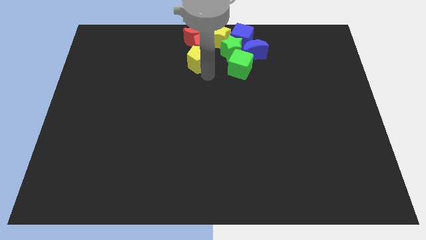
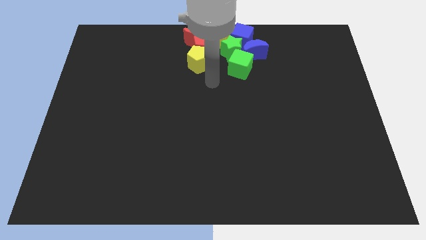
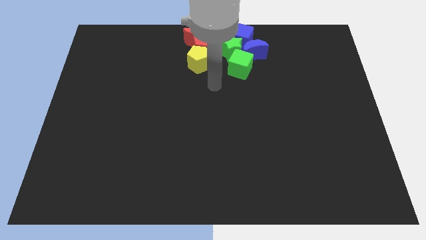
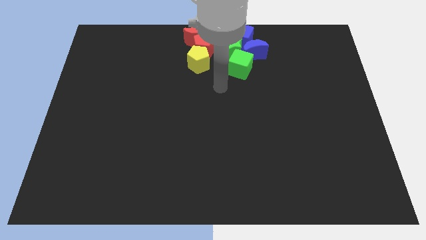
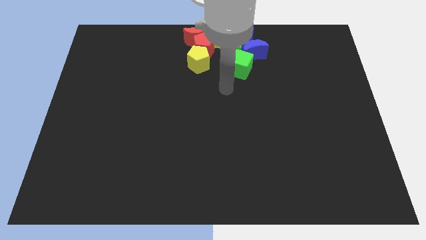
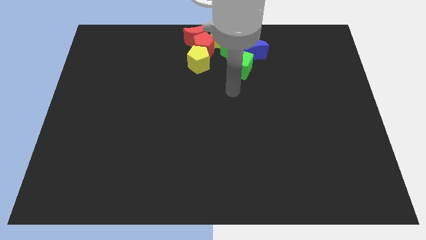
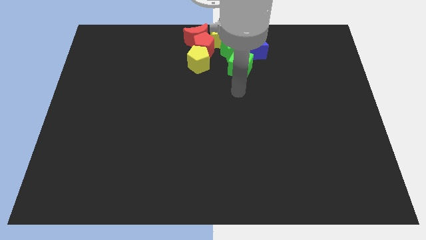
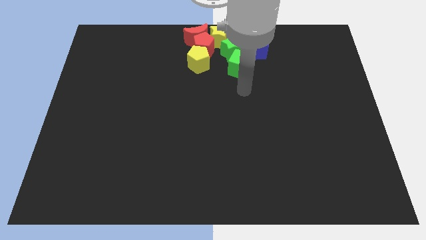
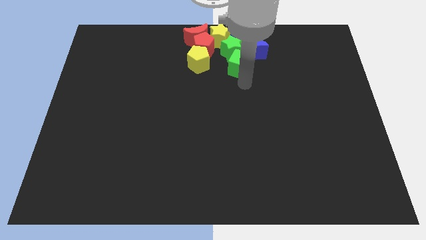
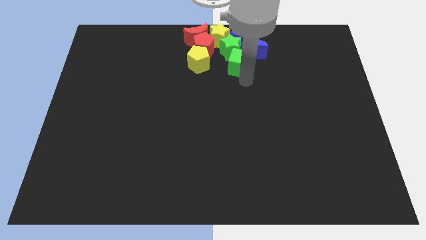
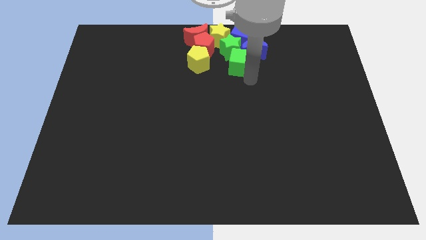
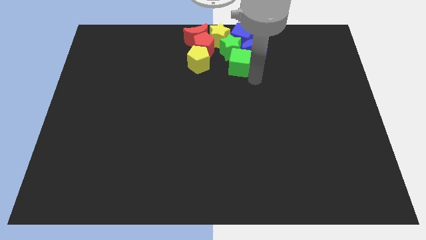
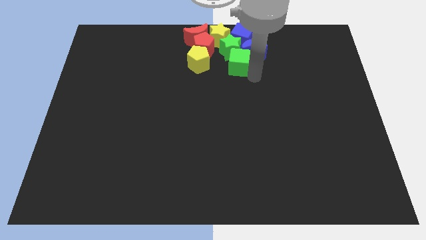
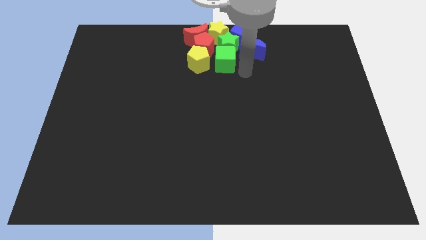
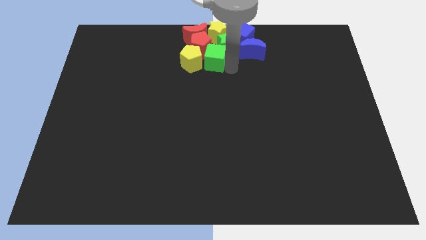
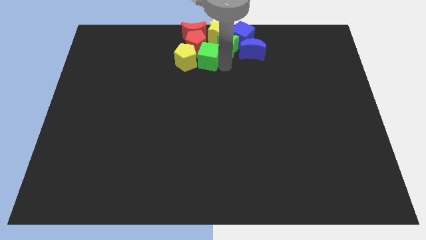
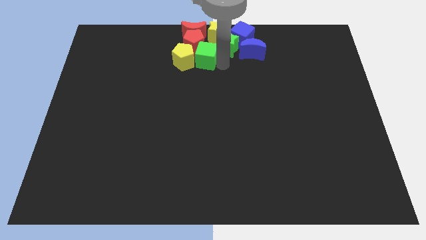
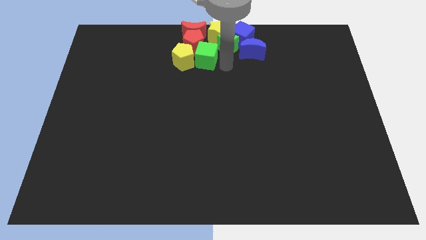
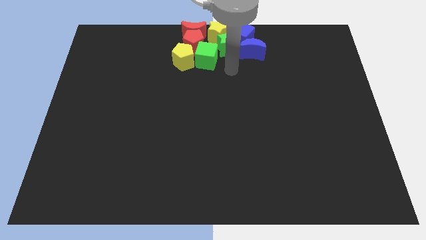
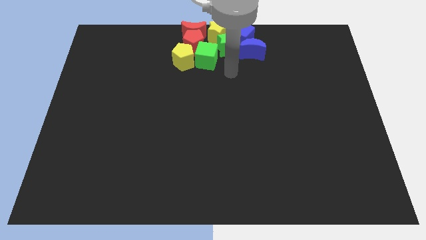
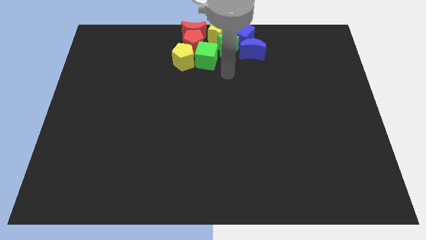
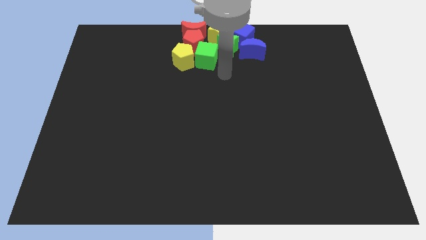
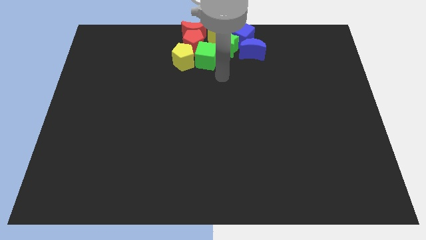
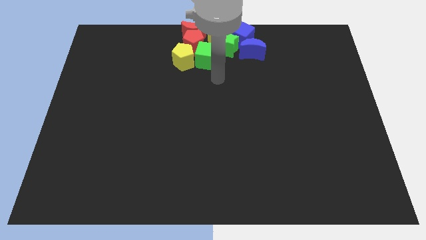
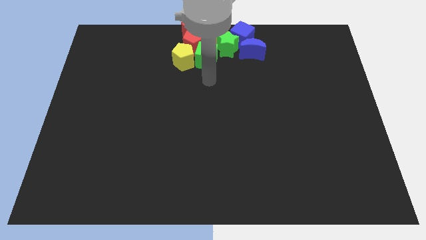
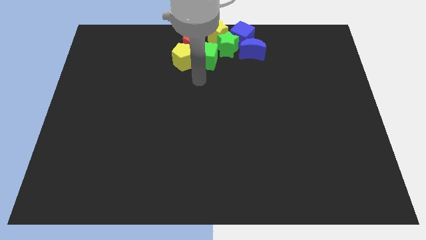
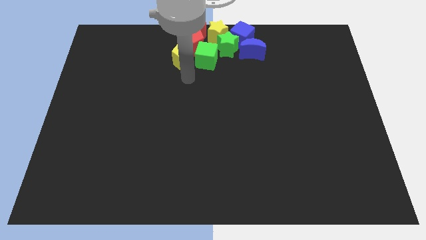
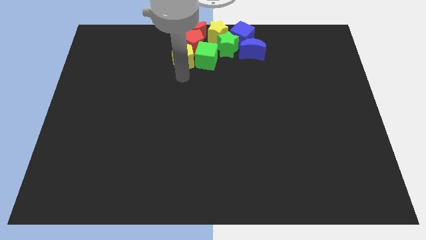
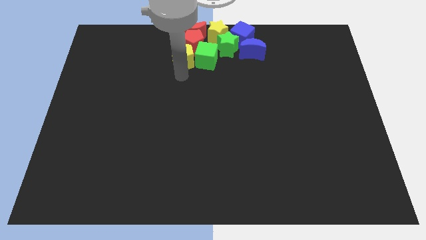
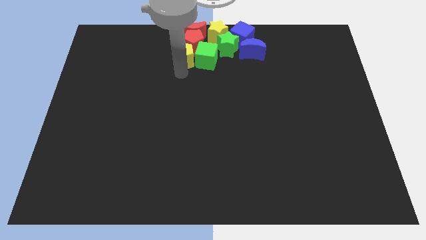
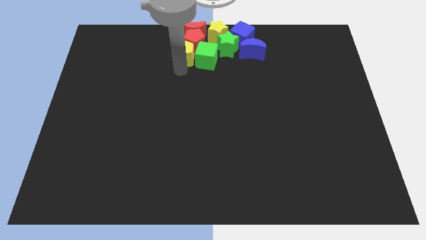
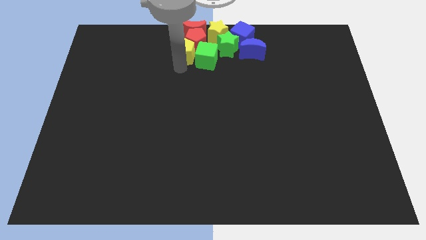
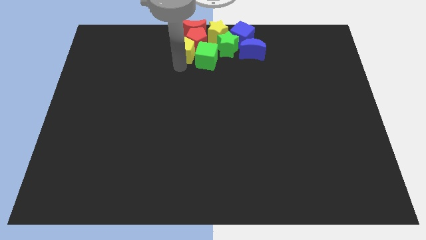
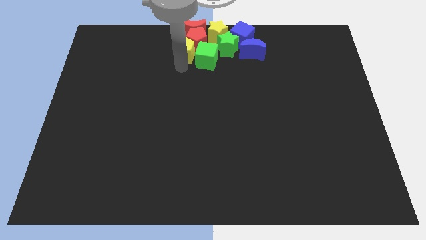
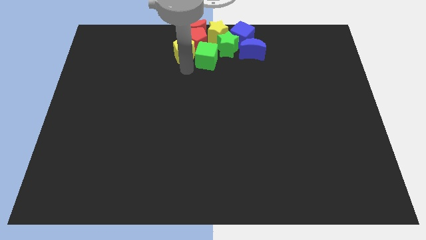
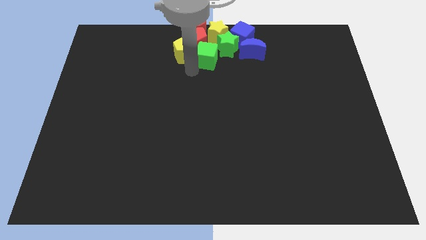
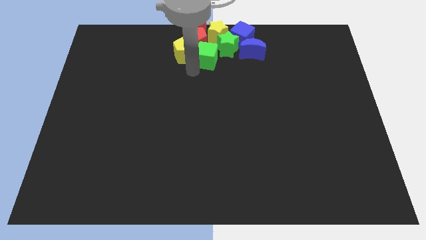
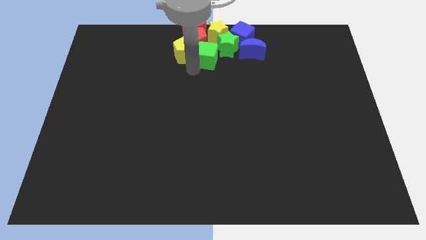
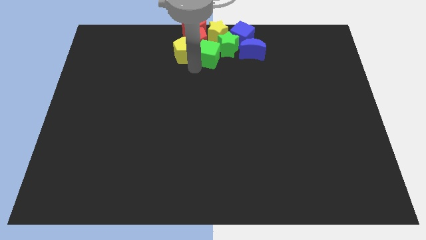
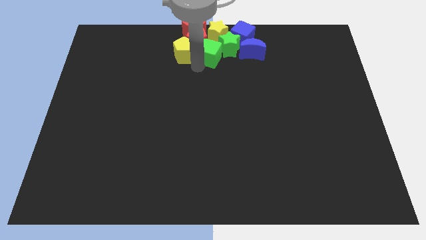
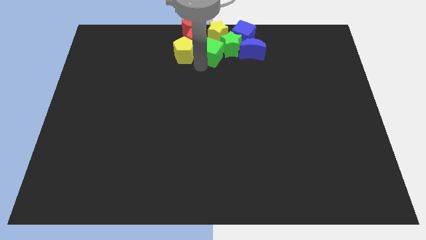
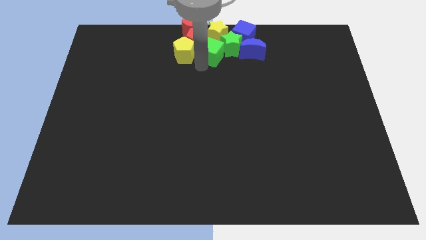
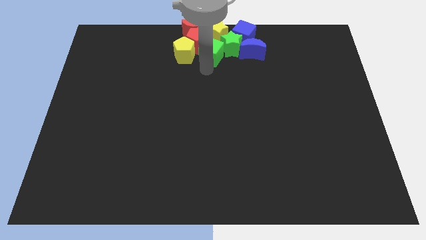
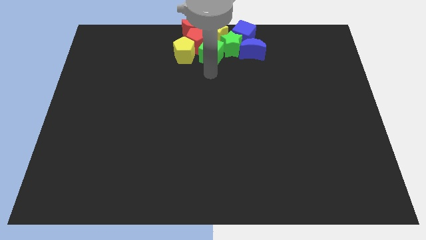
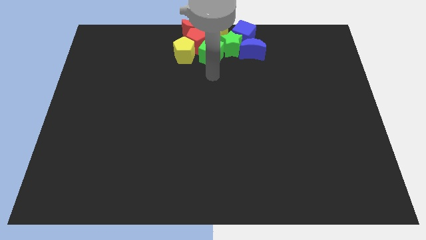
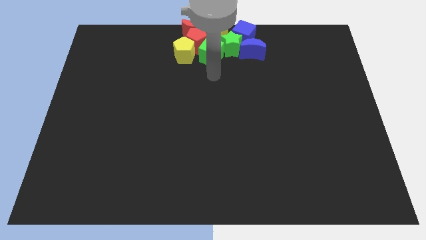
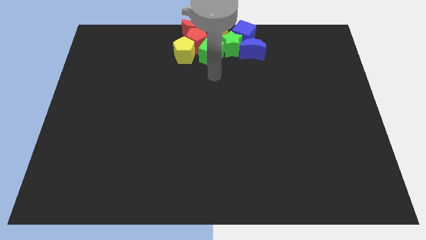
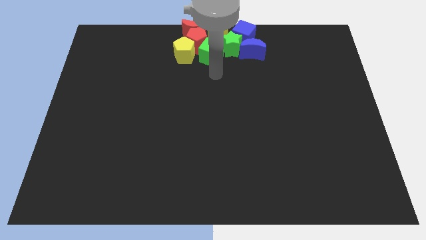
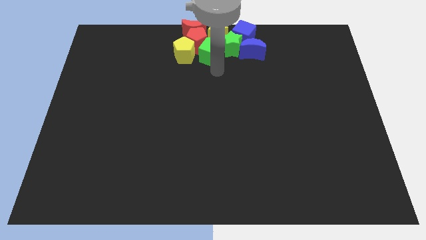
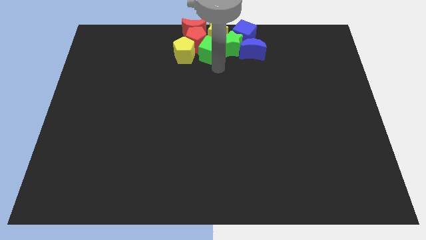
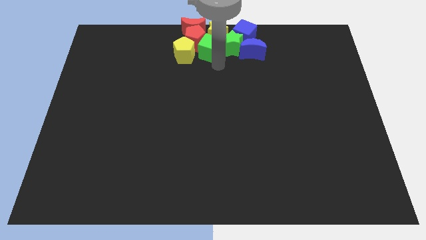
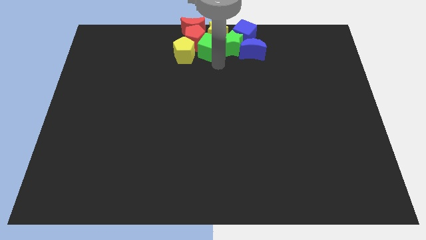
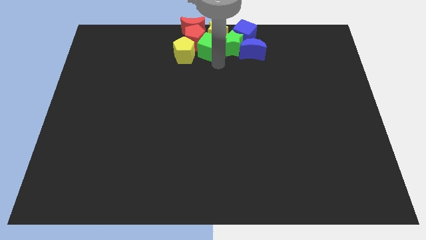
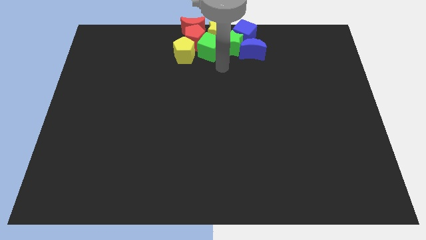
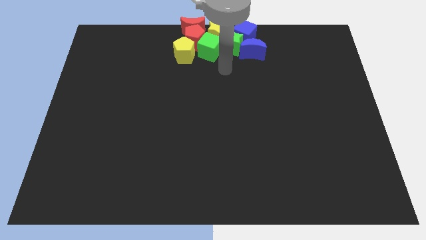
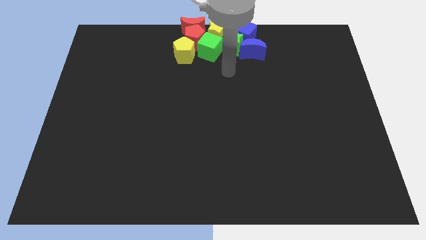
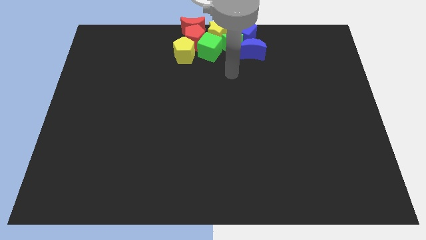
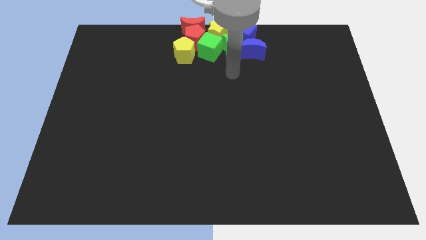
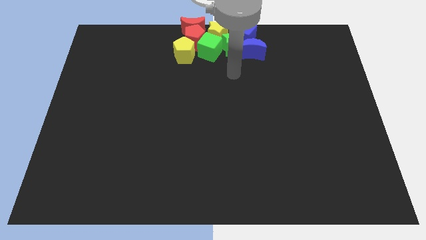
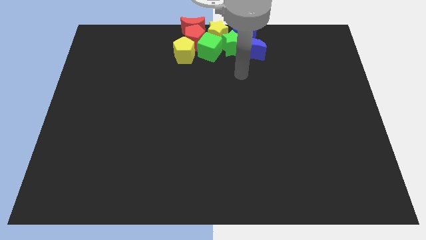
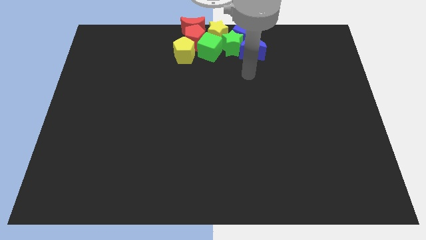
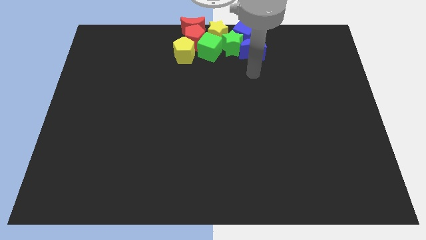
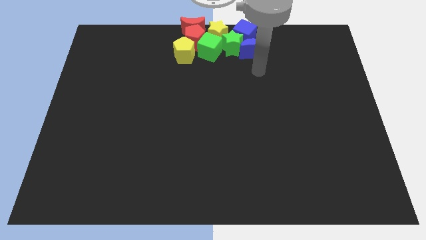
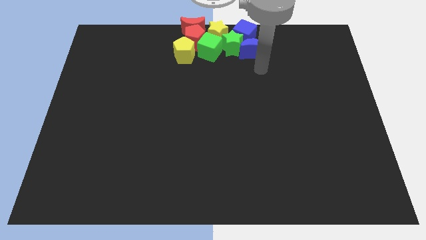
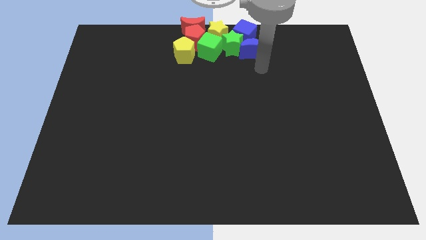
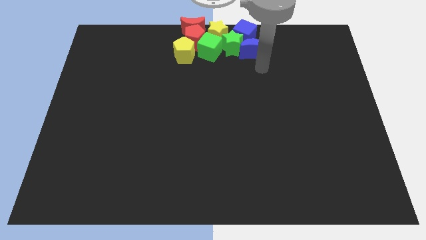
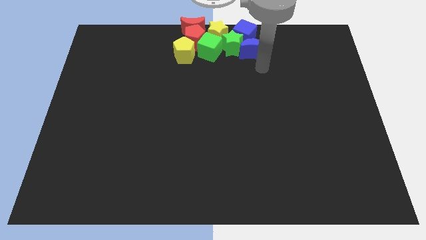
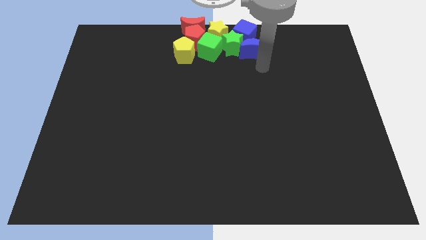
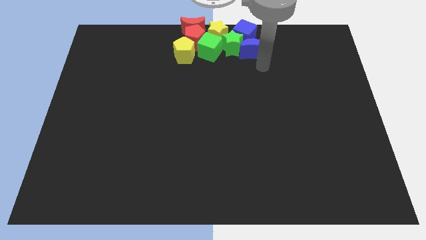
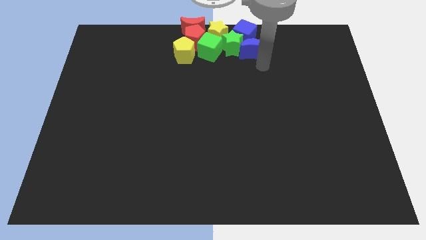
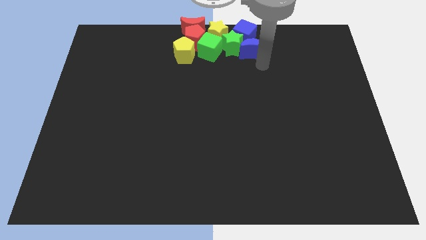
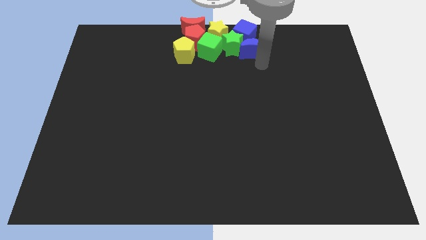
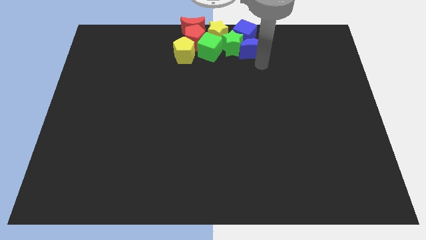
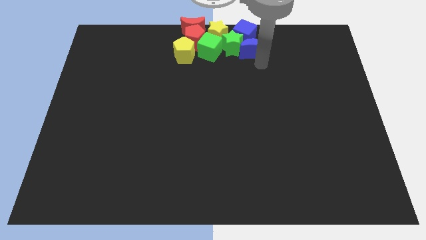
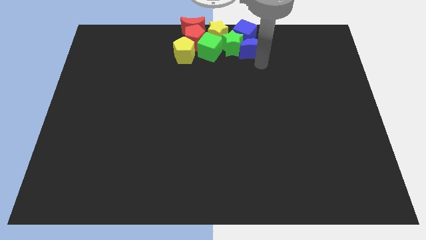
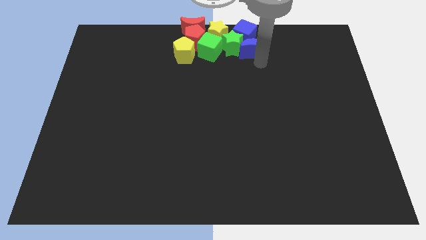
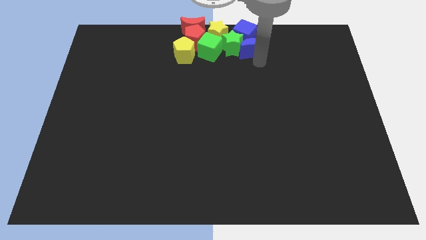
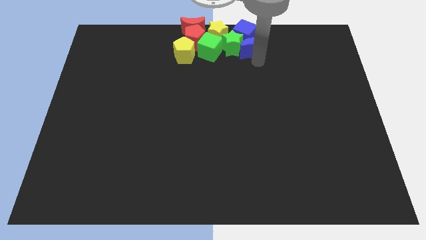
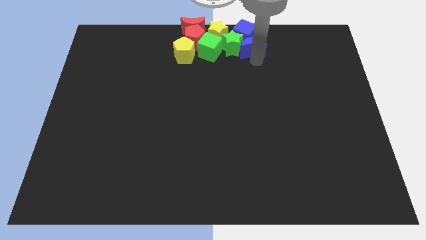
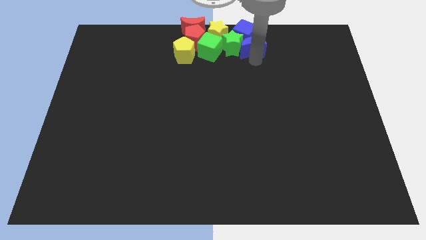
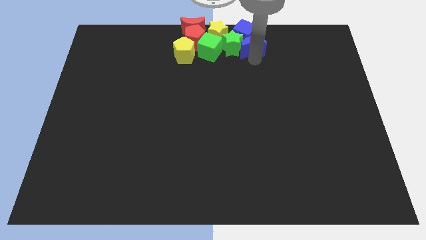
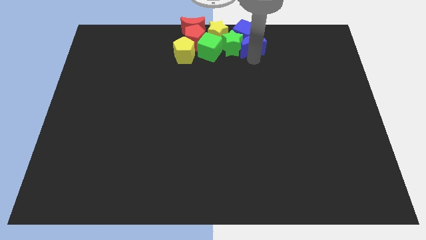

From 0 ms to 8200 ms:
push the group of blocks to the top center of the board

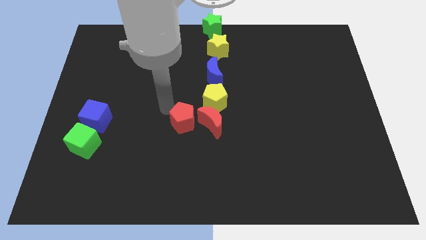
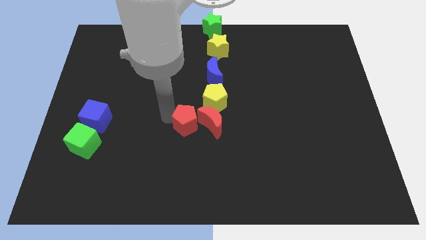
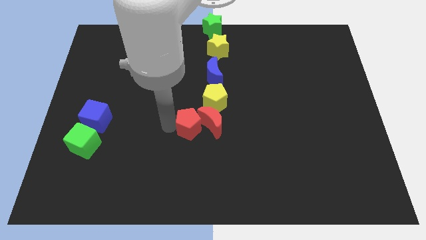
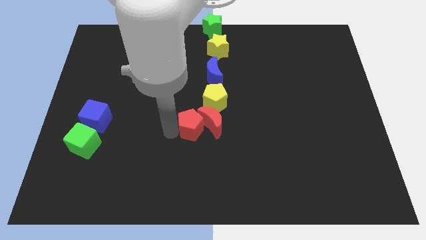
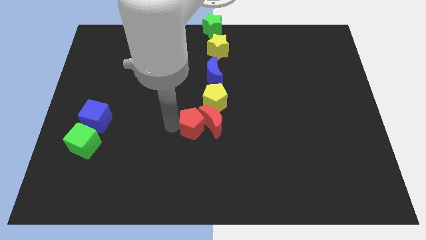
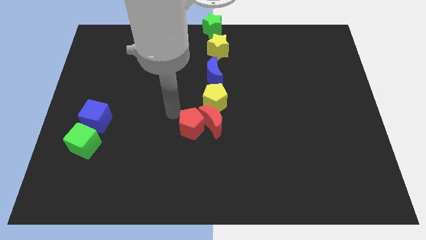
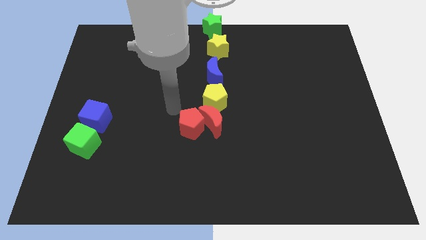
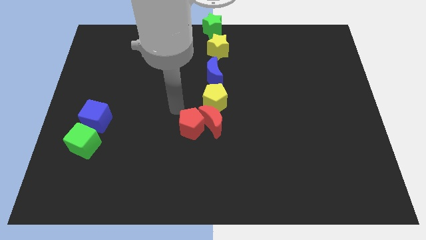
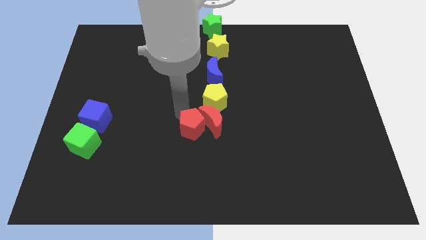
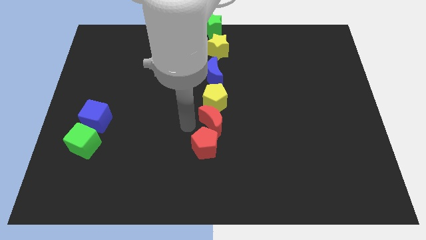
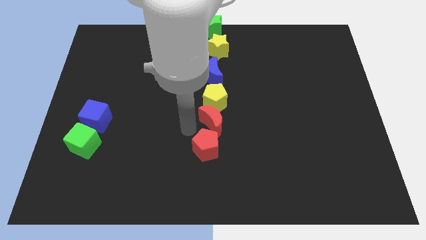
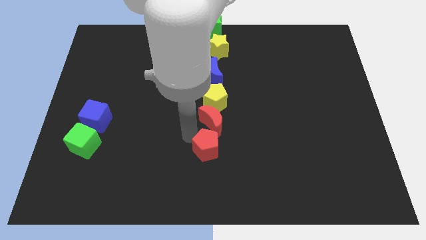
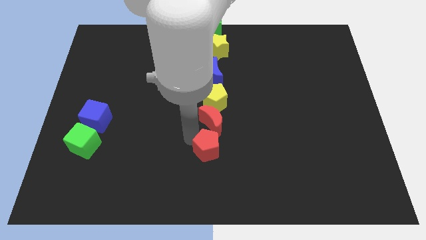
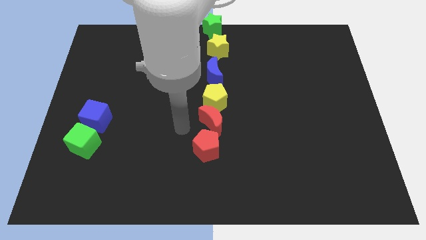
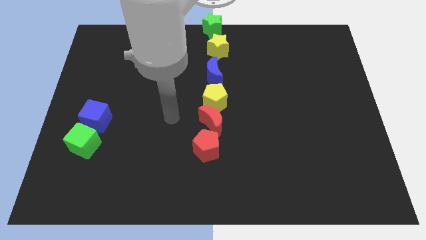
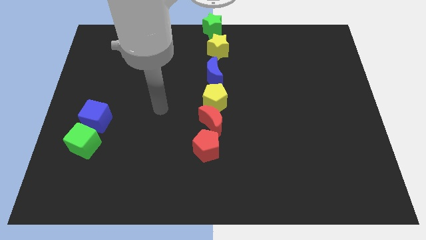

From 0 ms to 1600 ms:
push the red pentagon under to the red crescent
